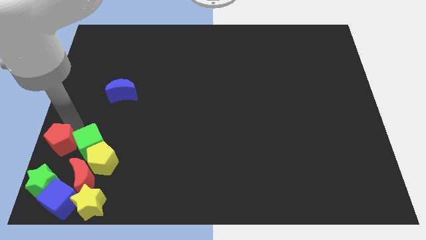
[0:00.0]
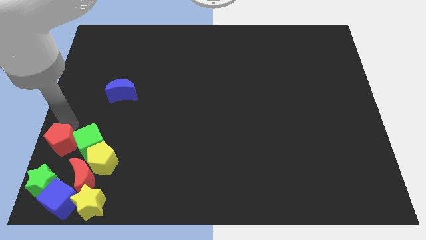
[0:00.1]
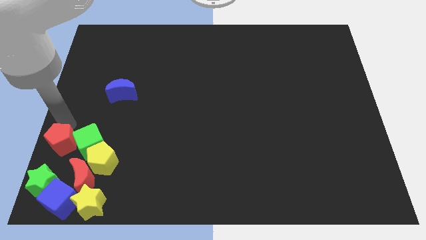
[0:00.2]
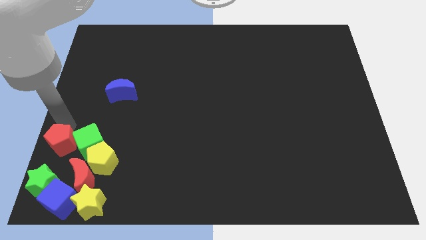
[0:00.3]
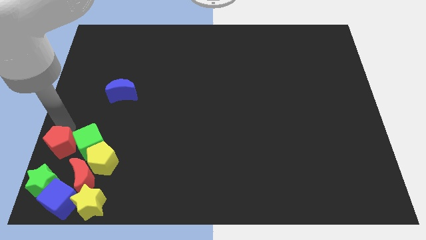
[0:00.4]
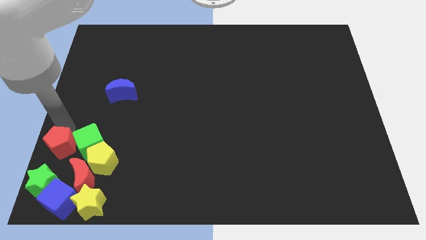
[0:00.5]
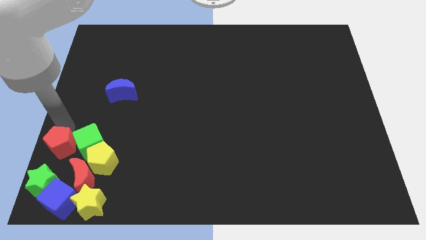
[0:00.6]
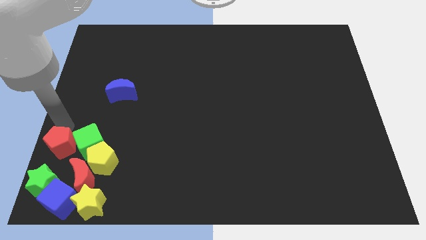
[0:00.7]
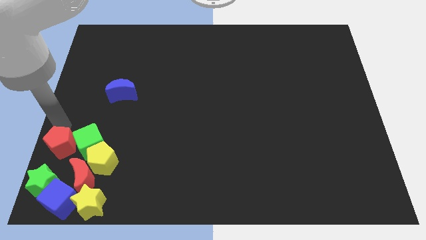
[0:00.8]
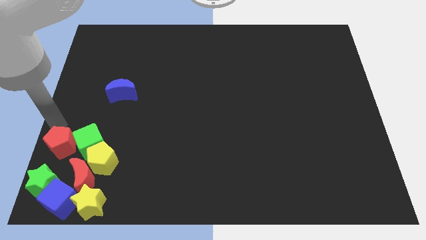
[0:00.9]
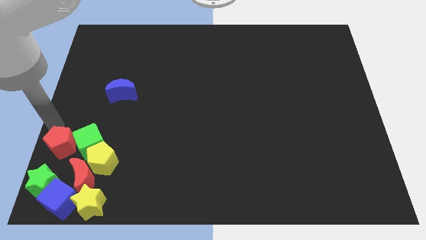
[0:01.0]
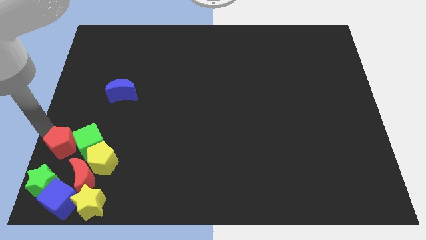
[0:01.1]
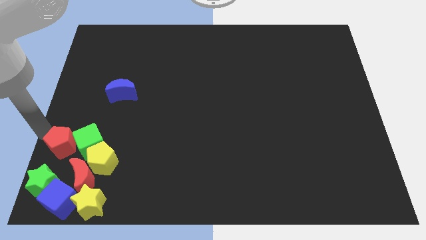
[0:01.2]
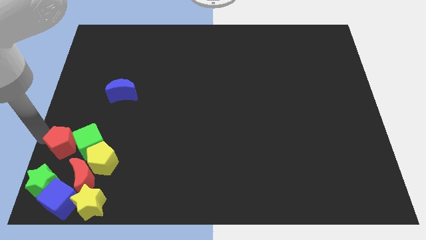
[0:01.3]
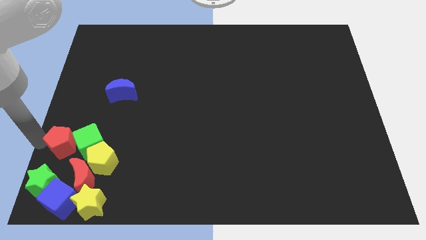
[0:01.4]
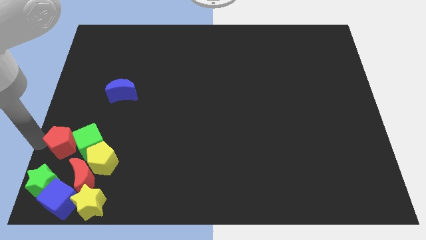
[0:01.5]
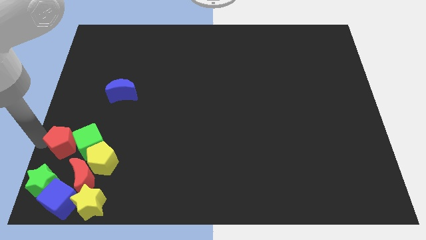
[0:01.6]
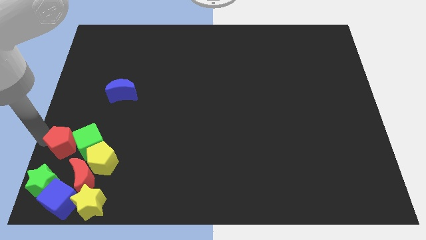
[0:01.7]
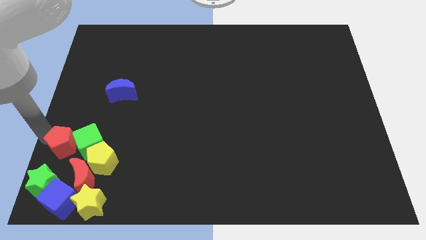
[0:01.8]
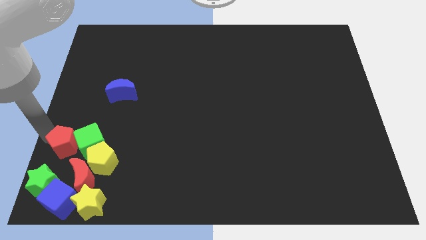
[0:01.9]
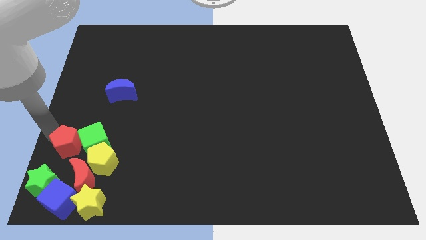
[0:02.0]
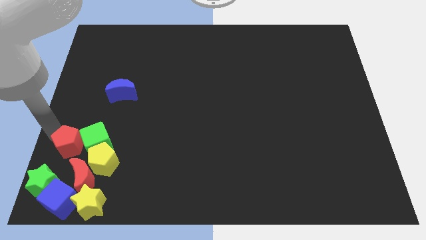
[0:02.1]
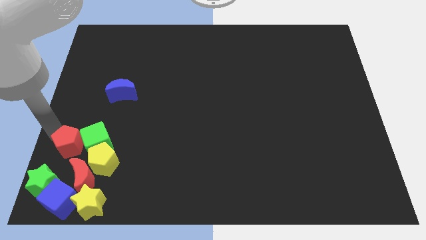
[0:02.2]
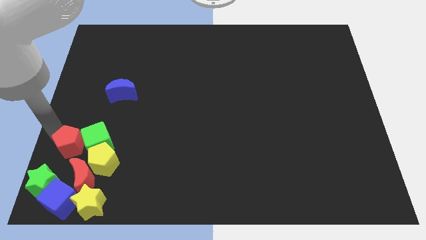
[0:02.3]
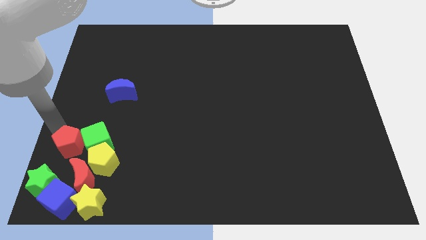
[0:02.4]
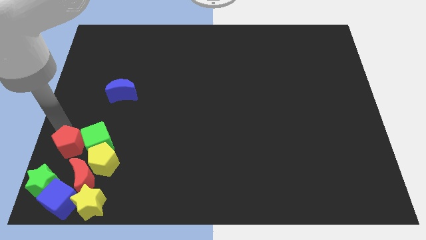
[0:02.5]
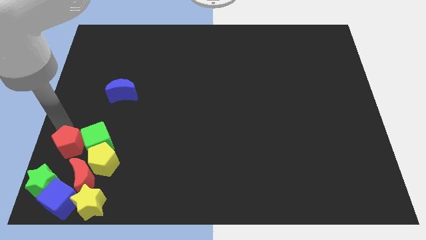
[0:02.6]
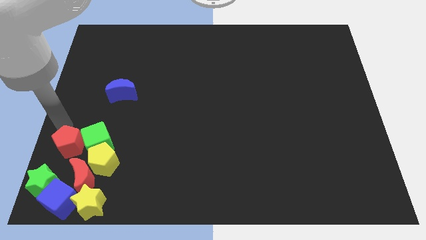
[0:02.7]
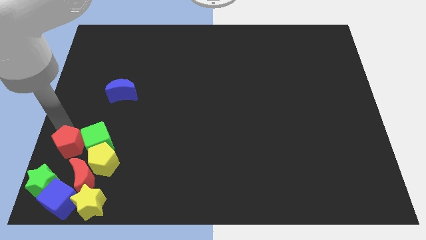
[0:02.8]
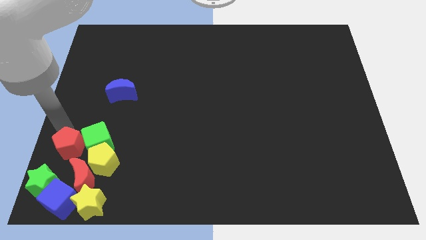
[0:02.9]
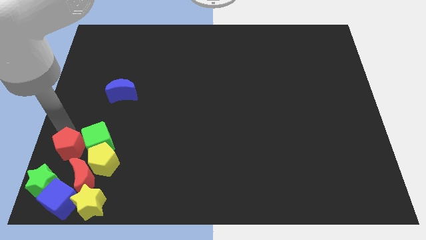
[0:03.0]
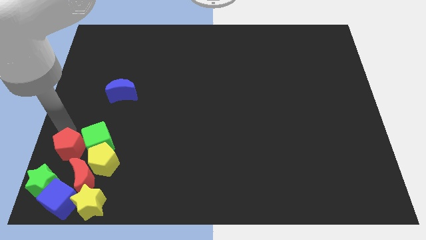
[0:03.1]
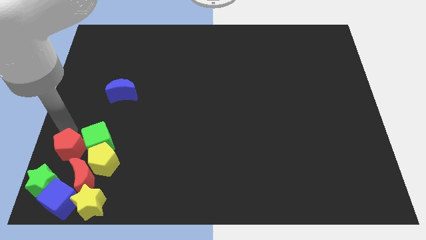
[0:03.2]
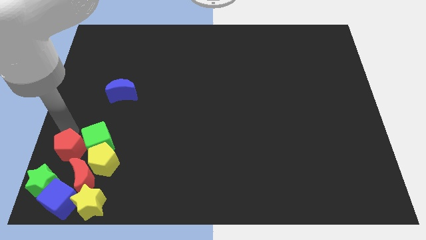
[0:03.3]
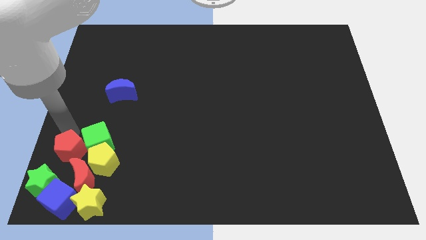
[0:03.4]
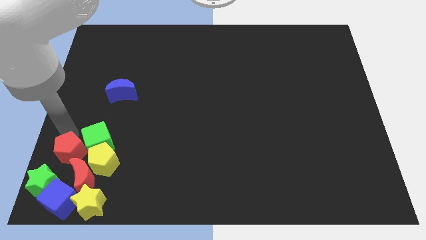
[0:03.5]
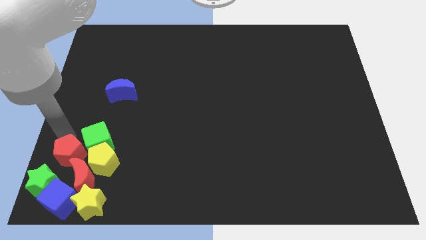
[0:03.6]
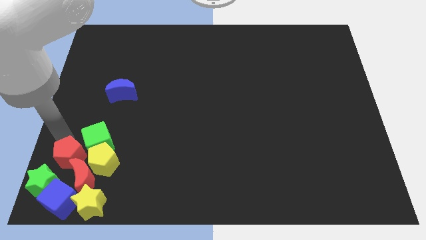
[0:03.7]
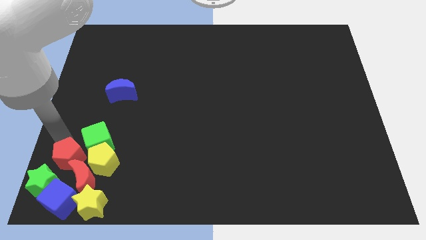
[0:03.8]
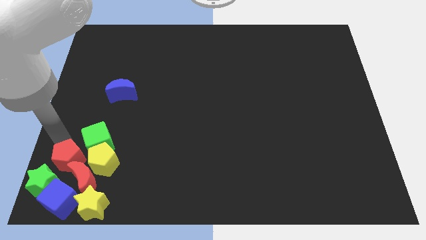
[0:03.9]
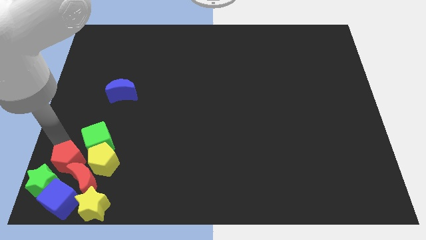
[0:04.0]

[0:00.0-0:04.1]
push red pentagon into red crescent

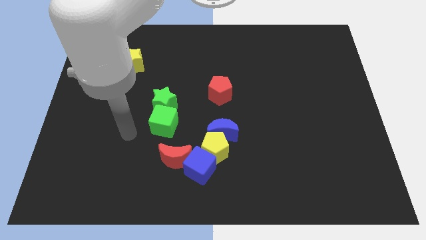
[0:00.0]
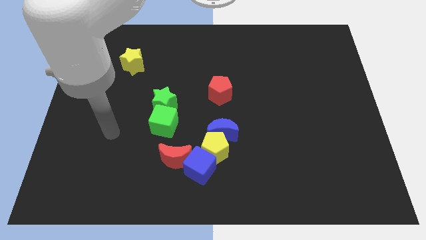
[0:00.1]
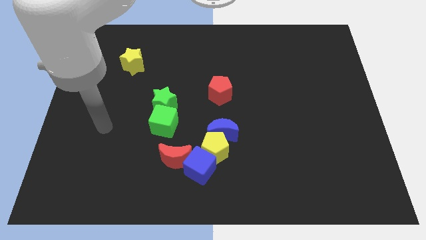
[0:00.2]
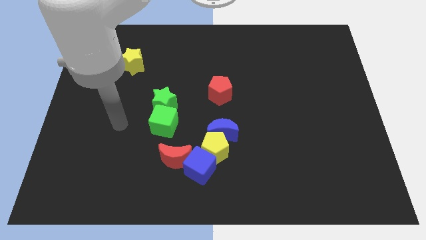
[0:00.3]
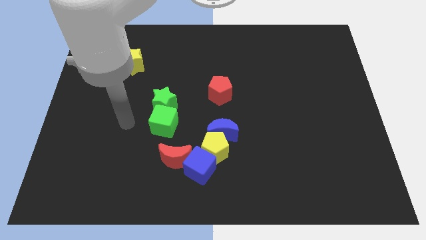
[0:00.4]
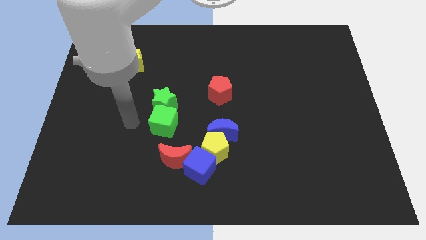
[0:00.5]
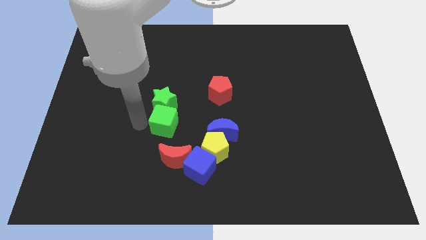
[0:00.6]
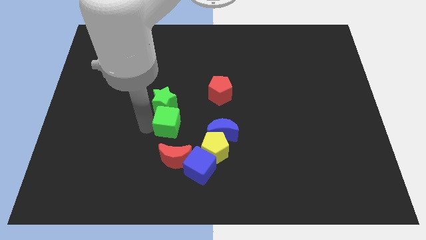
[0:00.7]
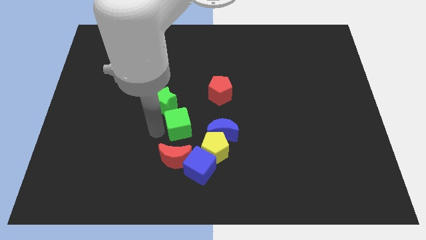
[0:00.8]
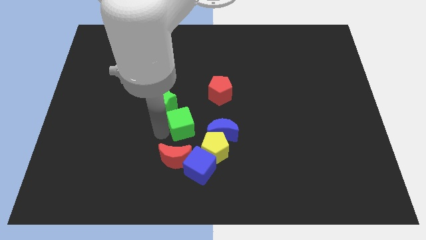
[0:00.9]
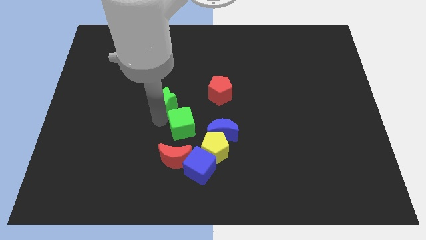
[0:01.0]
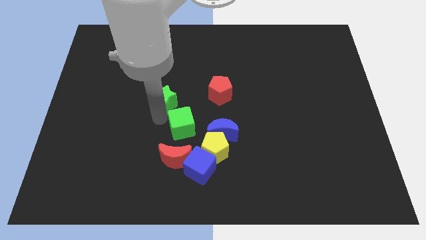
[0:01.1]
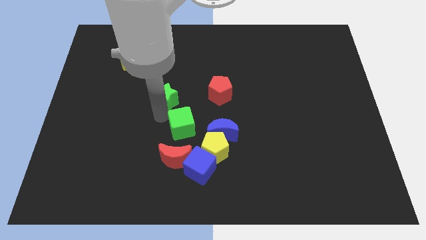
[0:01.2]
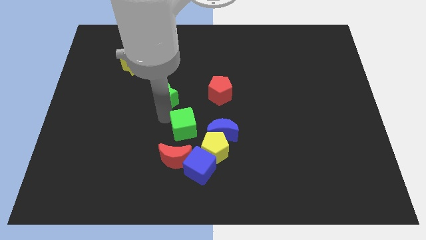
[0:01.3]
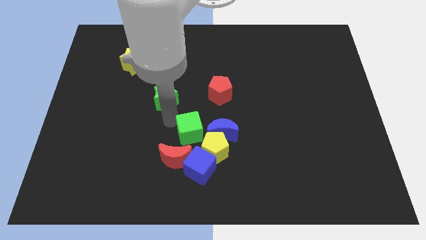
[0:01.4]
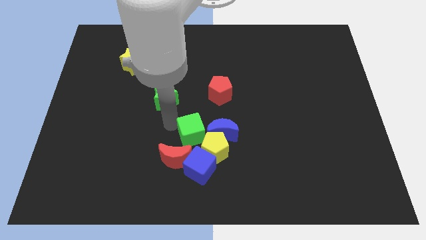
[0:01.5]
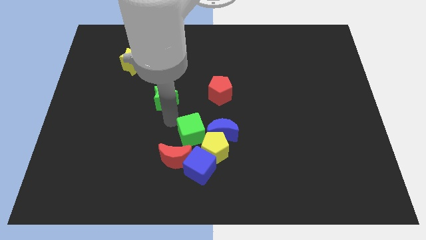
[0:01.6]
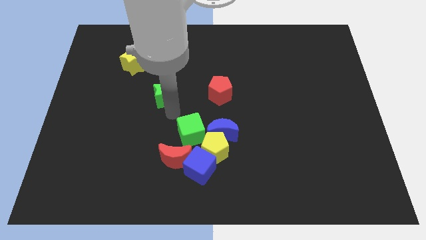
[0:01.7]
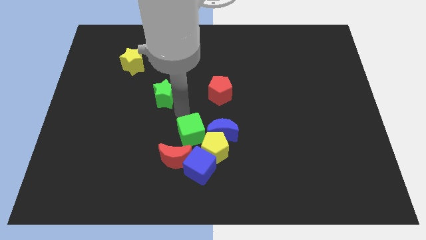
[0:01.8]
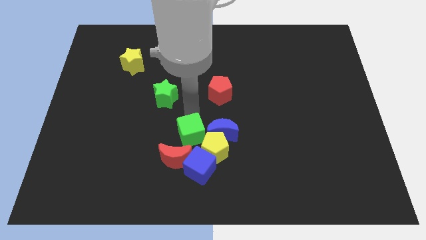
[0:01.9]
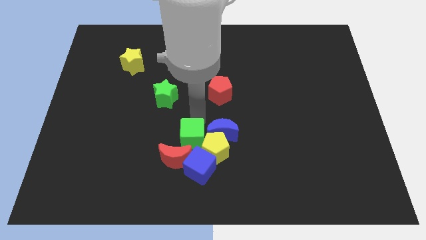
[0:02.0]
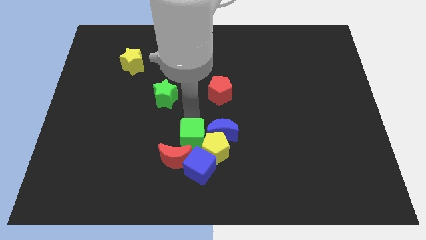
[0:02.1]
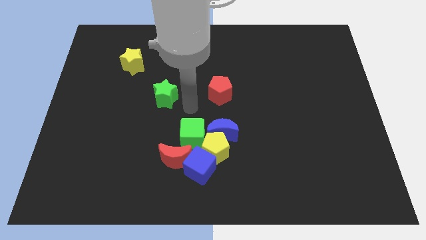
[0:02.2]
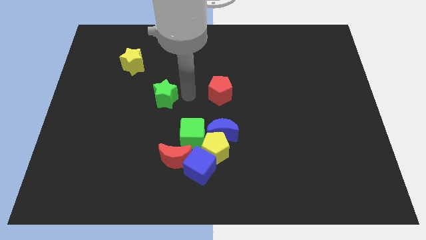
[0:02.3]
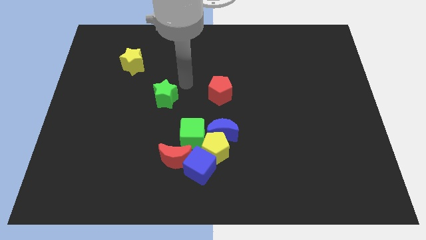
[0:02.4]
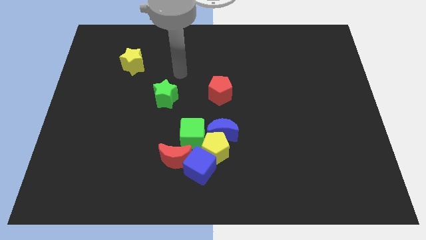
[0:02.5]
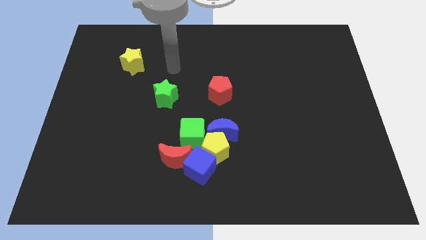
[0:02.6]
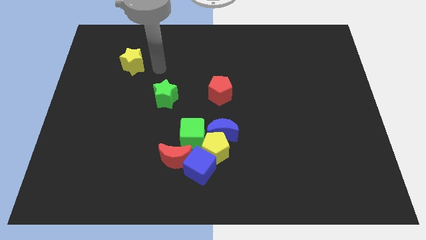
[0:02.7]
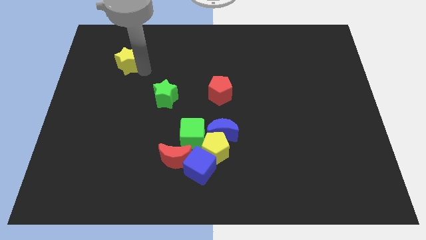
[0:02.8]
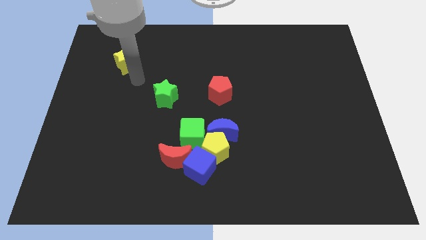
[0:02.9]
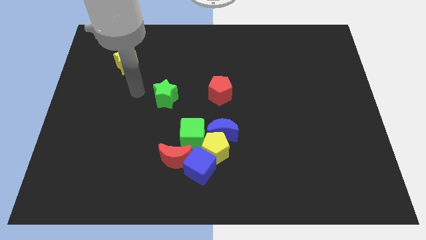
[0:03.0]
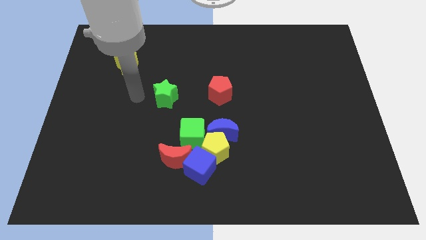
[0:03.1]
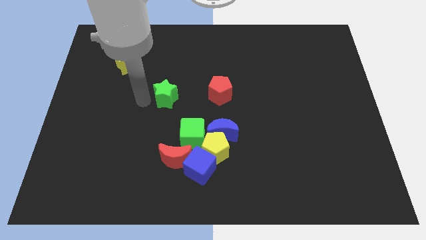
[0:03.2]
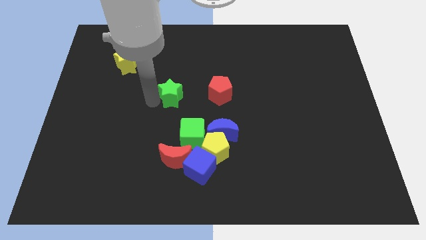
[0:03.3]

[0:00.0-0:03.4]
push the green star to the left of the red pentagon

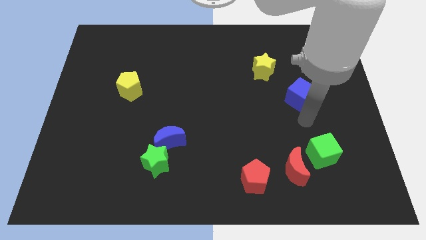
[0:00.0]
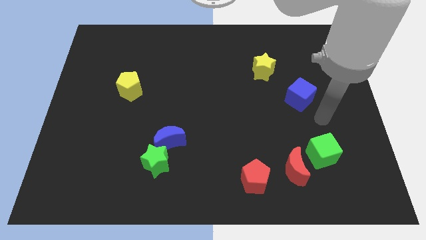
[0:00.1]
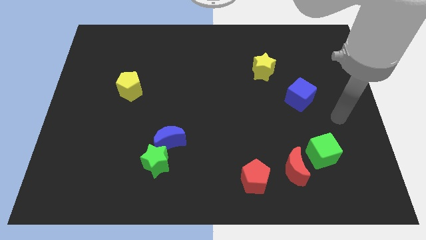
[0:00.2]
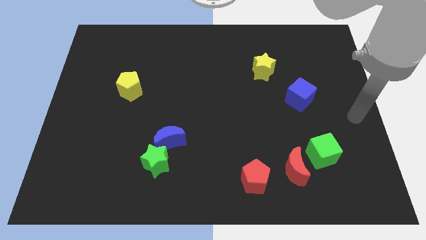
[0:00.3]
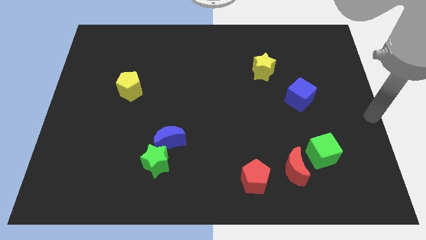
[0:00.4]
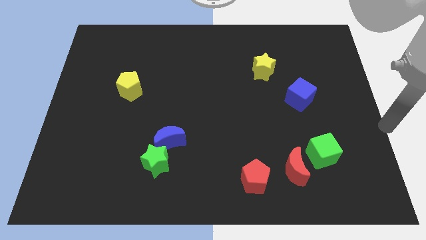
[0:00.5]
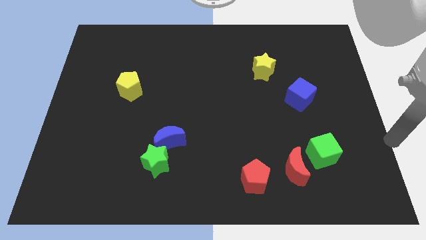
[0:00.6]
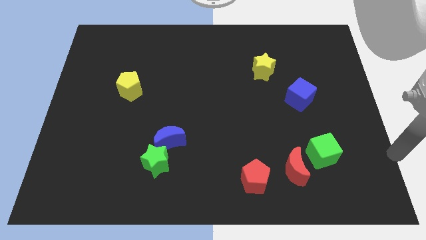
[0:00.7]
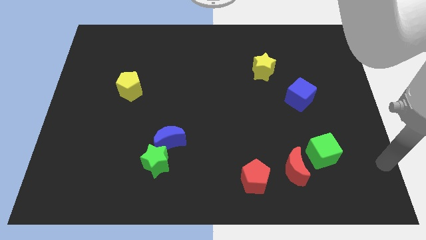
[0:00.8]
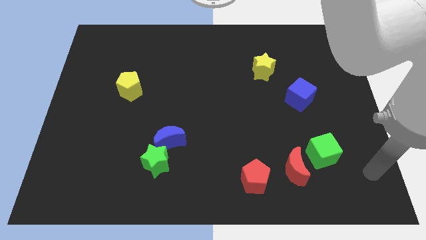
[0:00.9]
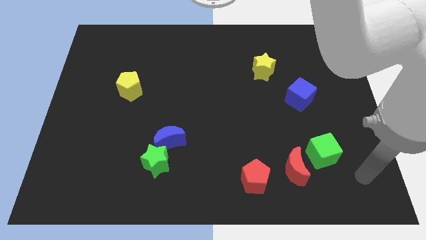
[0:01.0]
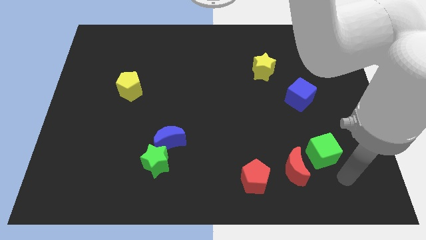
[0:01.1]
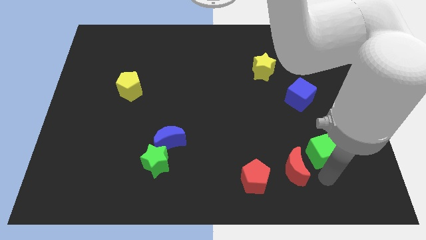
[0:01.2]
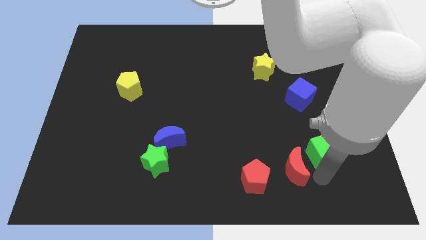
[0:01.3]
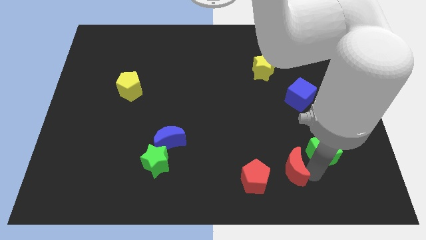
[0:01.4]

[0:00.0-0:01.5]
move your arm towards red crescent
